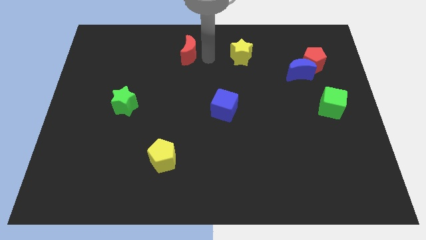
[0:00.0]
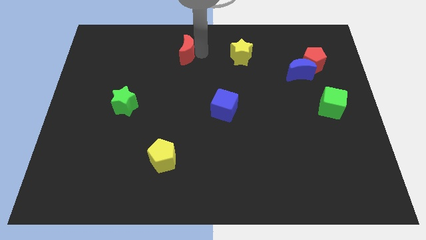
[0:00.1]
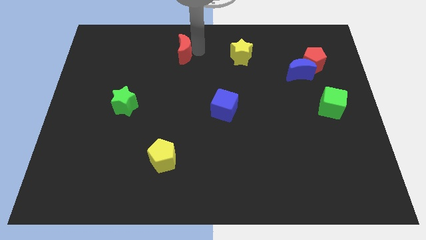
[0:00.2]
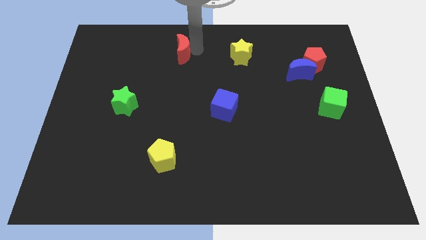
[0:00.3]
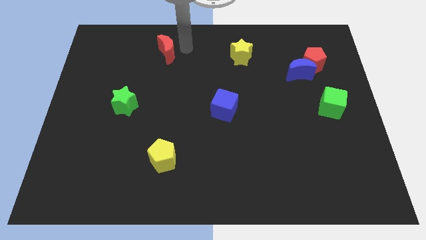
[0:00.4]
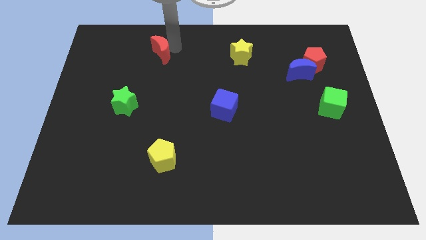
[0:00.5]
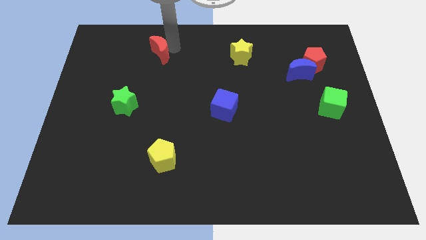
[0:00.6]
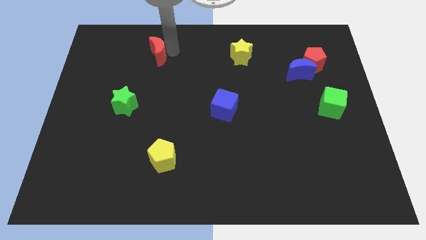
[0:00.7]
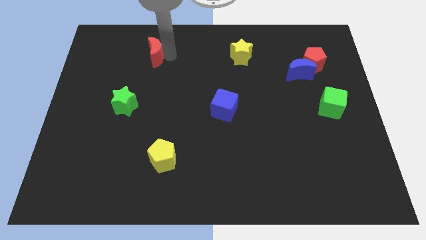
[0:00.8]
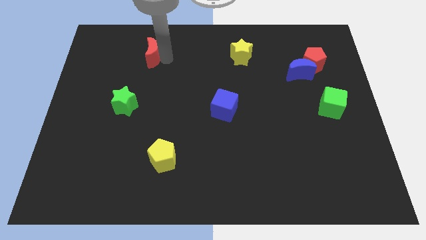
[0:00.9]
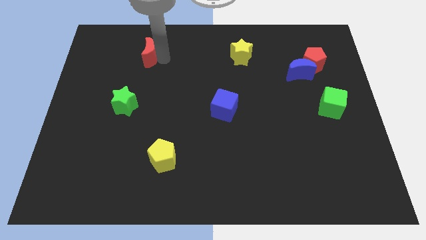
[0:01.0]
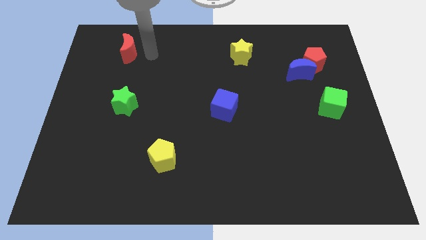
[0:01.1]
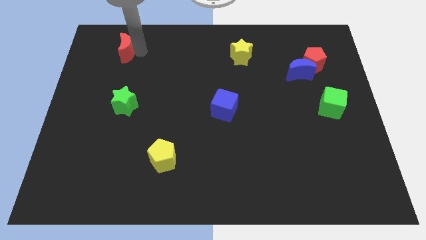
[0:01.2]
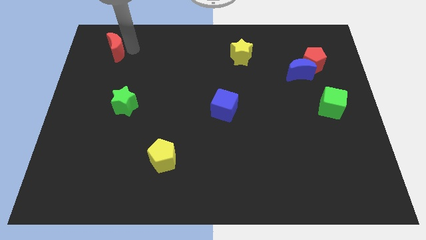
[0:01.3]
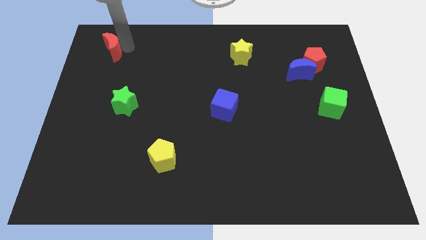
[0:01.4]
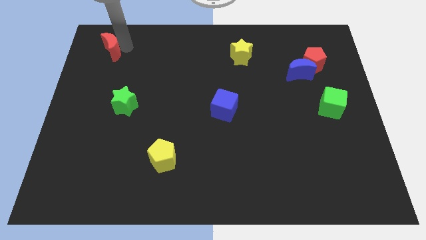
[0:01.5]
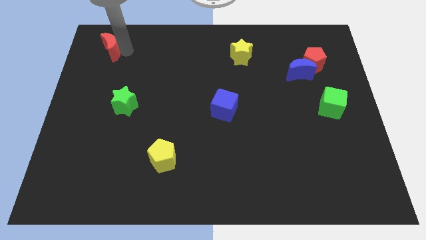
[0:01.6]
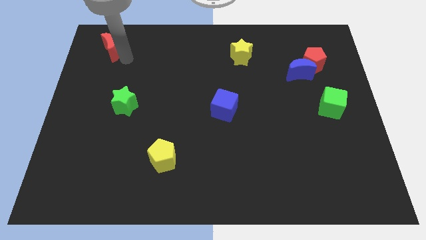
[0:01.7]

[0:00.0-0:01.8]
push the red crescent towards the top left side of the board

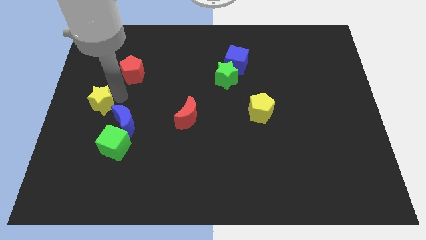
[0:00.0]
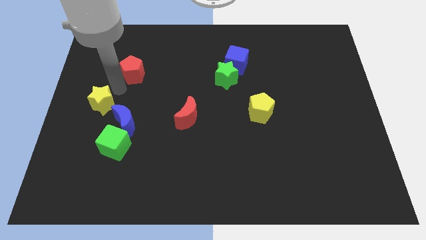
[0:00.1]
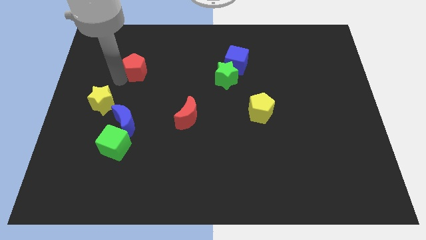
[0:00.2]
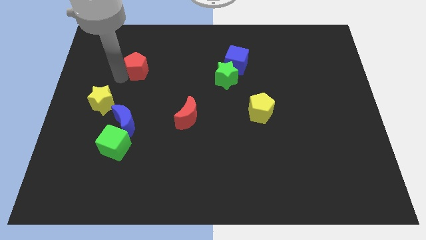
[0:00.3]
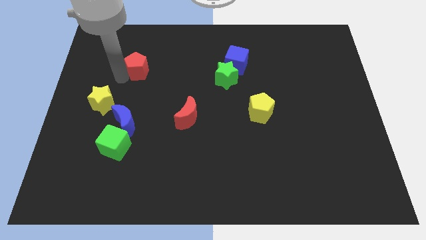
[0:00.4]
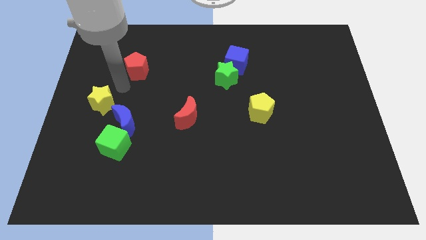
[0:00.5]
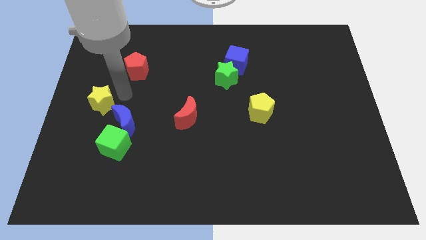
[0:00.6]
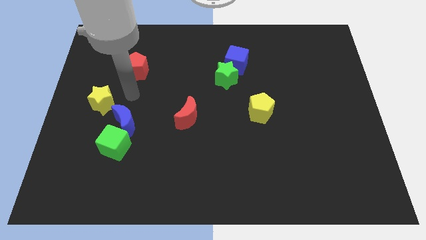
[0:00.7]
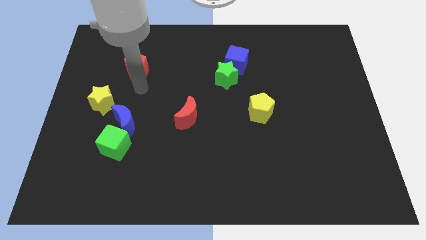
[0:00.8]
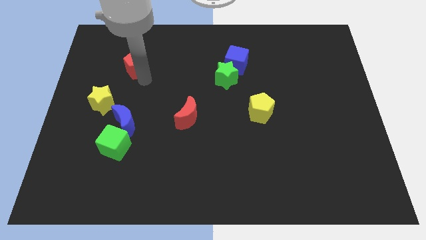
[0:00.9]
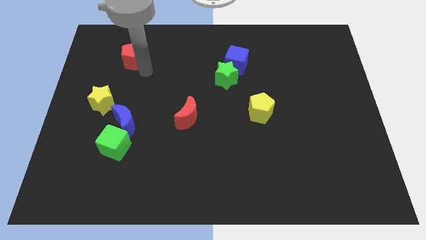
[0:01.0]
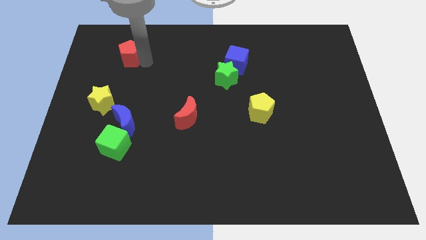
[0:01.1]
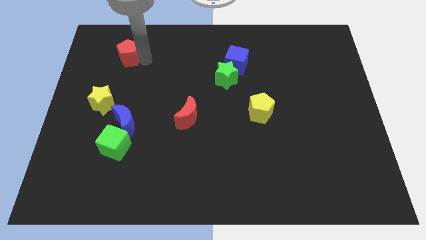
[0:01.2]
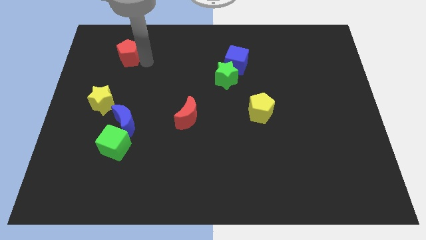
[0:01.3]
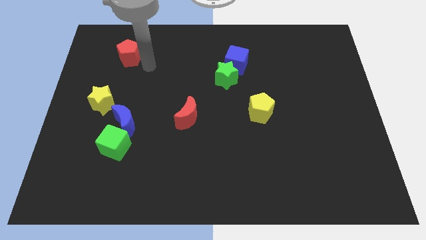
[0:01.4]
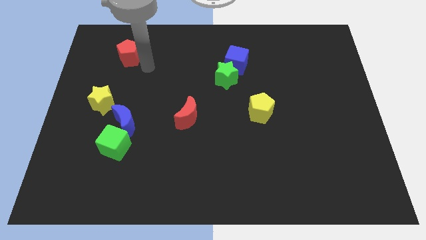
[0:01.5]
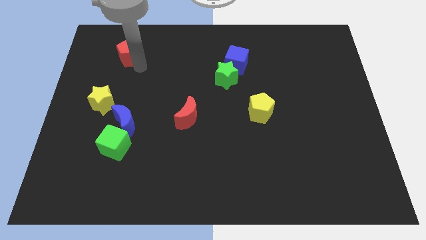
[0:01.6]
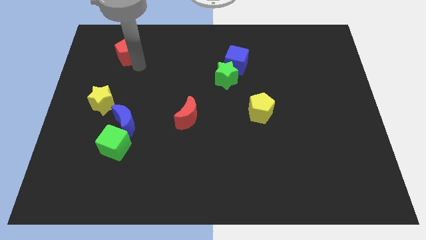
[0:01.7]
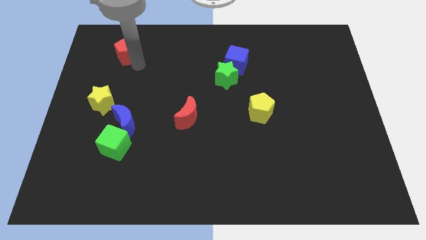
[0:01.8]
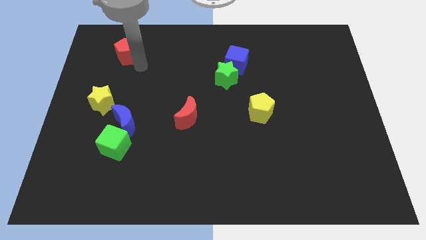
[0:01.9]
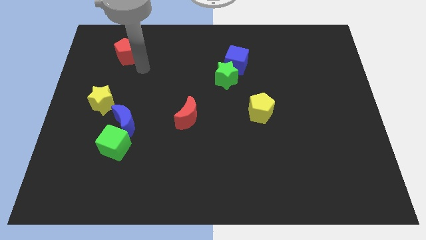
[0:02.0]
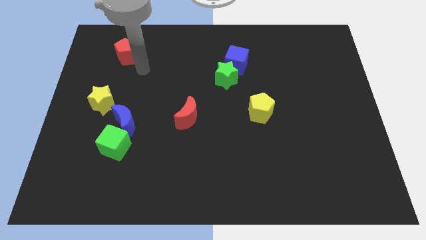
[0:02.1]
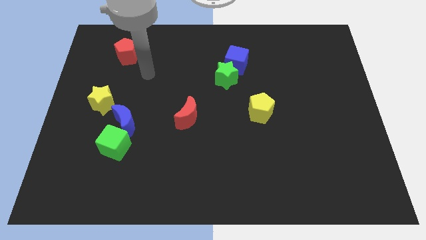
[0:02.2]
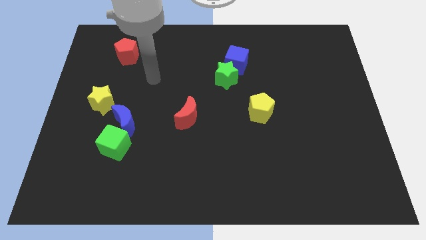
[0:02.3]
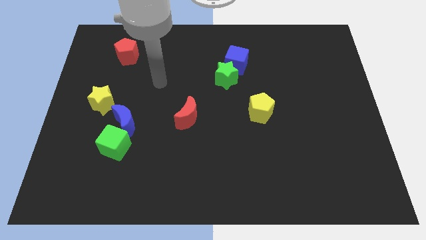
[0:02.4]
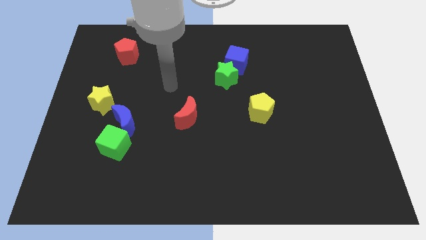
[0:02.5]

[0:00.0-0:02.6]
push red pentagon upwards

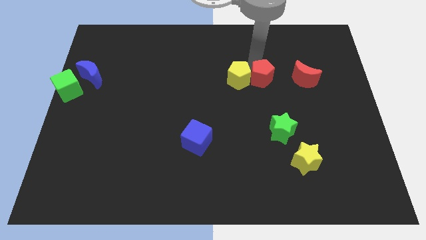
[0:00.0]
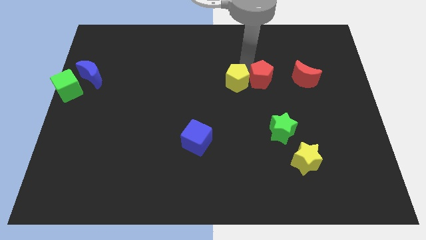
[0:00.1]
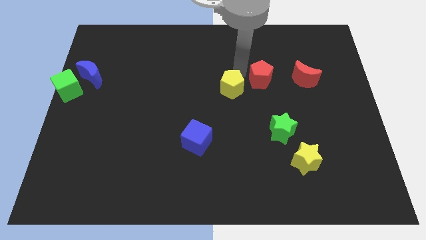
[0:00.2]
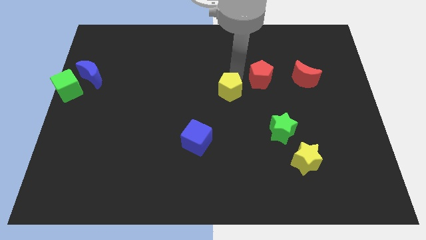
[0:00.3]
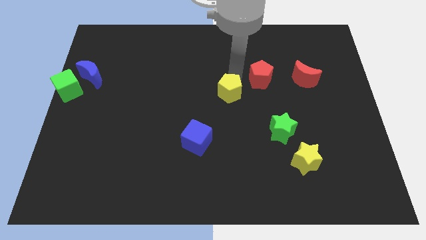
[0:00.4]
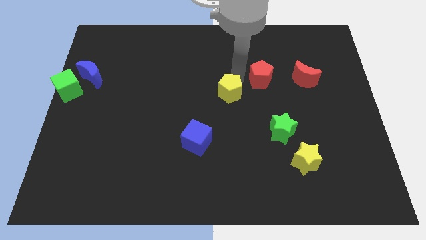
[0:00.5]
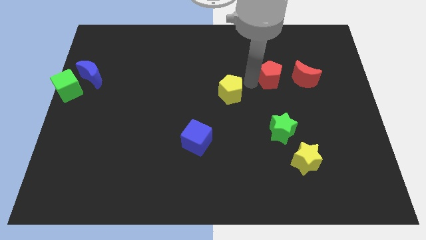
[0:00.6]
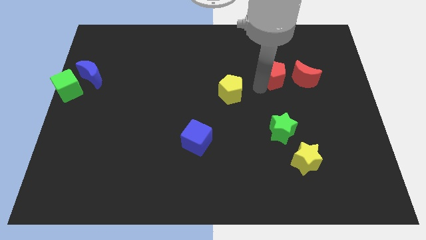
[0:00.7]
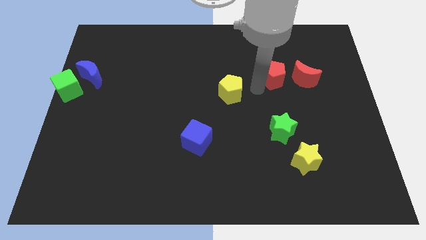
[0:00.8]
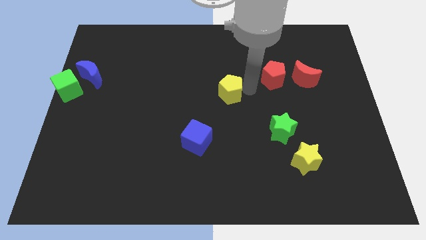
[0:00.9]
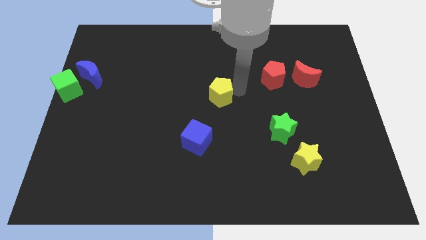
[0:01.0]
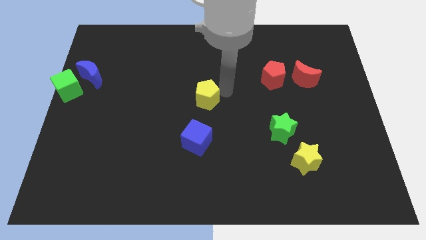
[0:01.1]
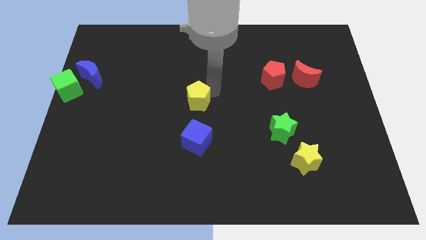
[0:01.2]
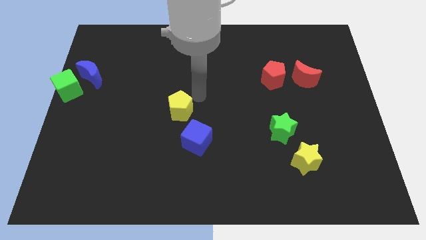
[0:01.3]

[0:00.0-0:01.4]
separate the yellow pentagon from the red pentagon

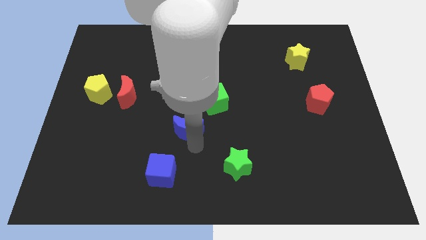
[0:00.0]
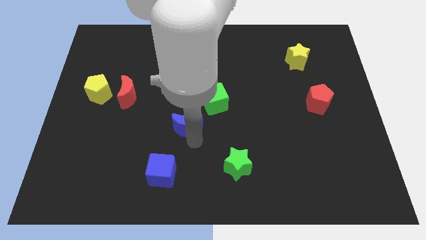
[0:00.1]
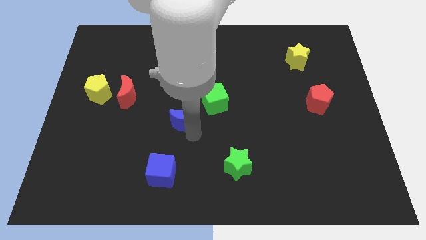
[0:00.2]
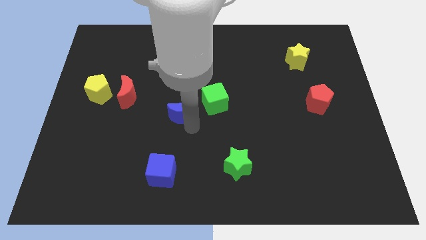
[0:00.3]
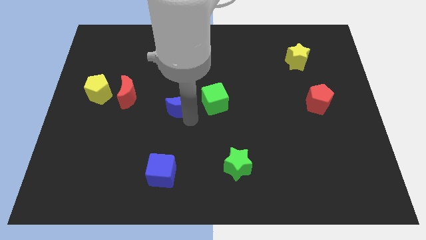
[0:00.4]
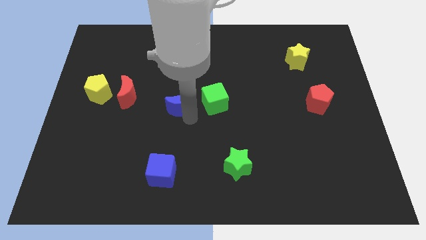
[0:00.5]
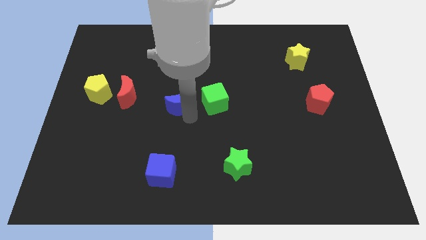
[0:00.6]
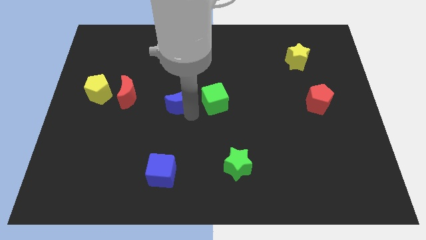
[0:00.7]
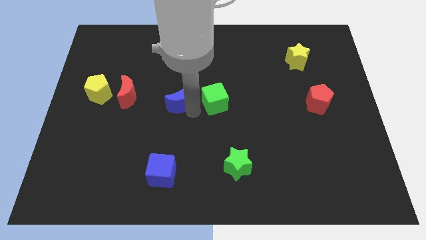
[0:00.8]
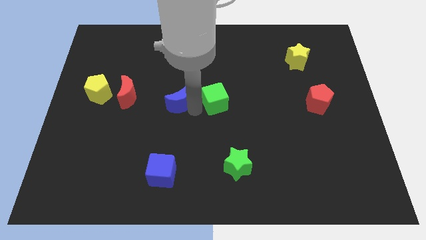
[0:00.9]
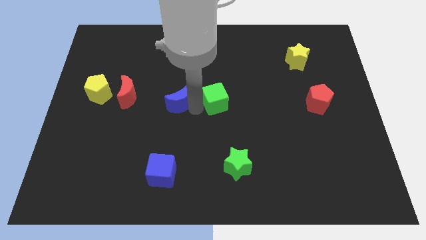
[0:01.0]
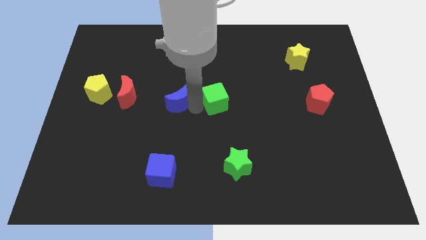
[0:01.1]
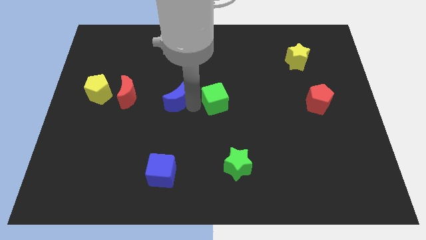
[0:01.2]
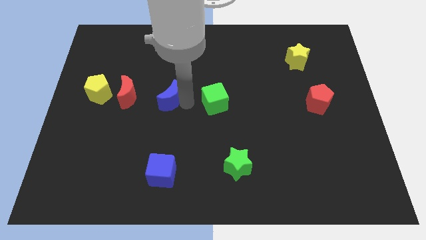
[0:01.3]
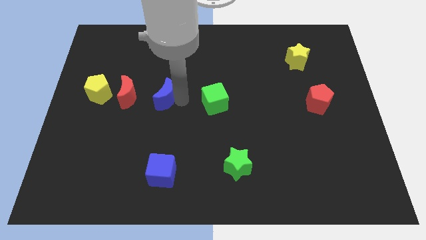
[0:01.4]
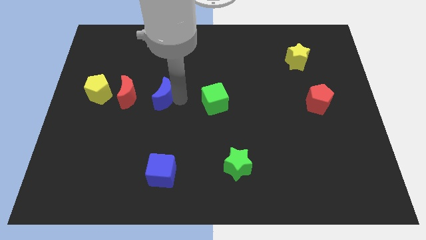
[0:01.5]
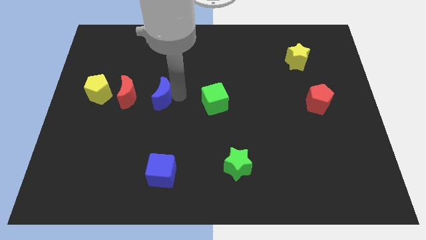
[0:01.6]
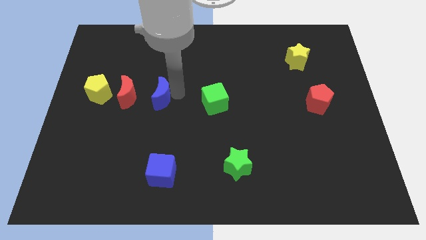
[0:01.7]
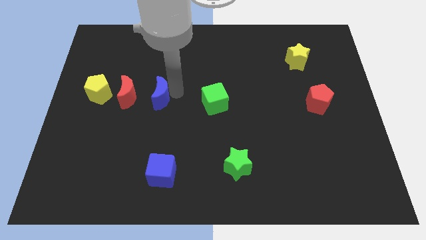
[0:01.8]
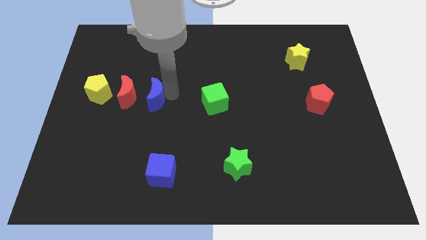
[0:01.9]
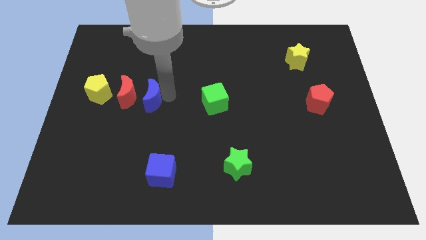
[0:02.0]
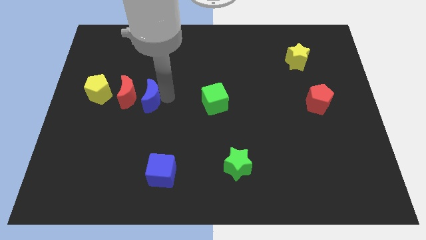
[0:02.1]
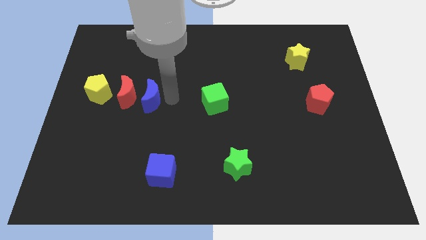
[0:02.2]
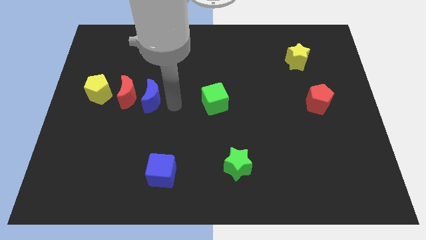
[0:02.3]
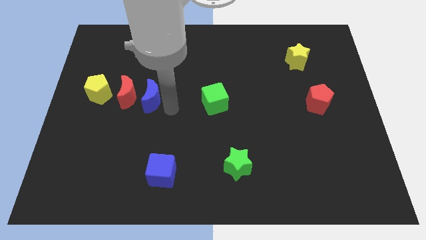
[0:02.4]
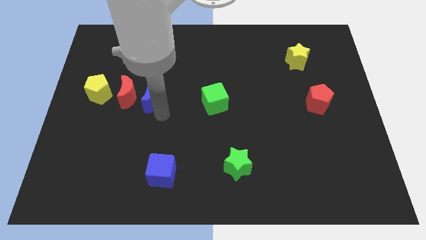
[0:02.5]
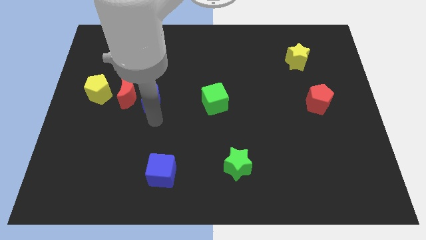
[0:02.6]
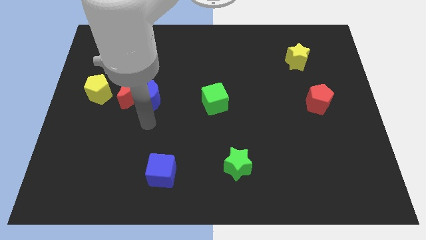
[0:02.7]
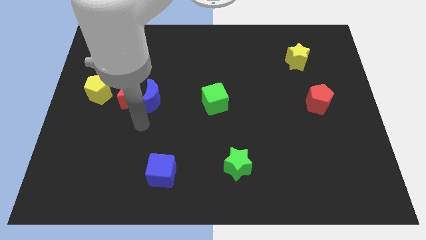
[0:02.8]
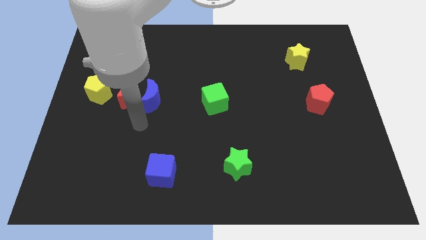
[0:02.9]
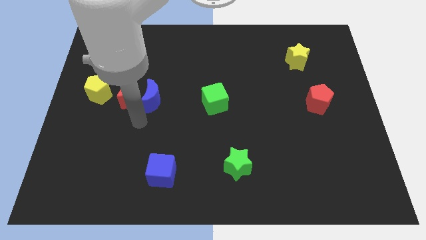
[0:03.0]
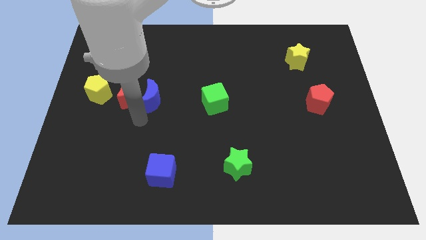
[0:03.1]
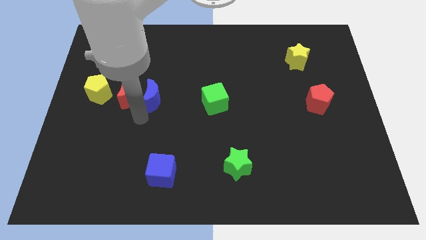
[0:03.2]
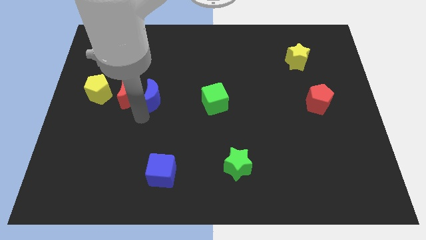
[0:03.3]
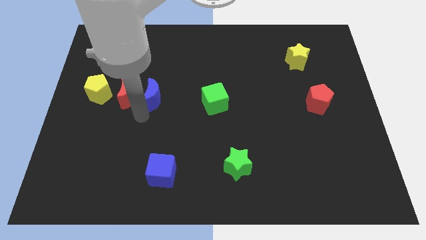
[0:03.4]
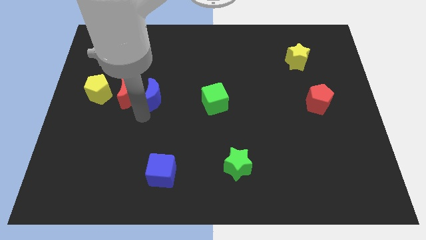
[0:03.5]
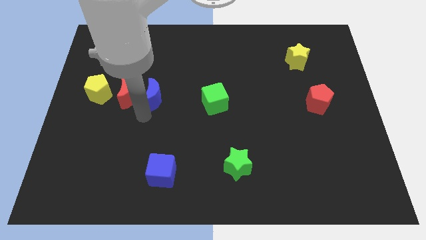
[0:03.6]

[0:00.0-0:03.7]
move the blue moon to the right of red moon
